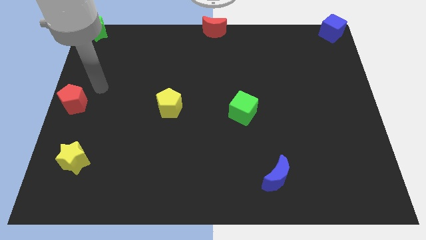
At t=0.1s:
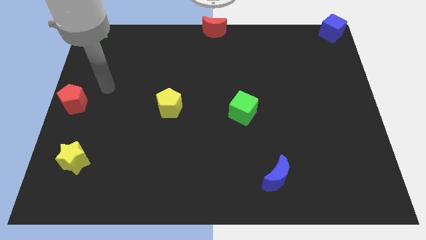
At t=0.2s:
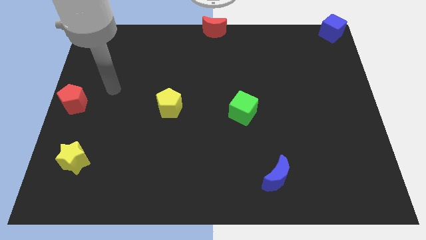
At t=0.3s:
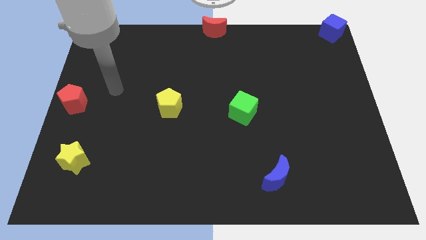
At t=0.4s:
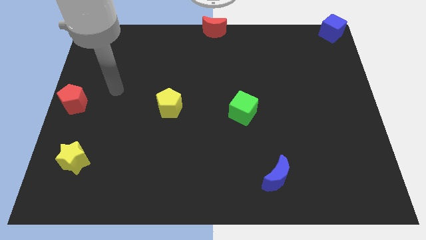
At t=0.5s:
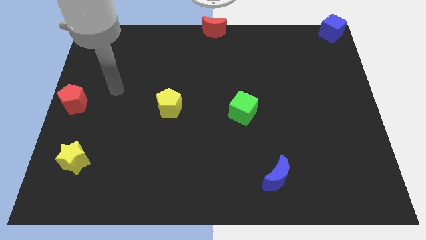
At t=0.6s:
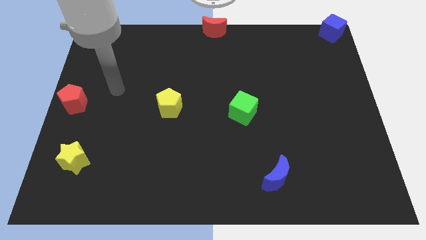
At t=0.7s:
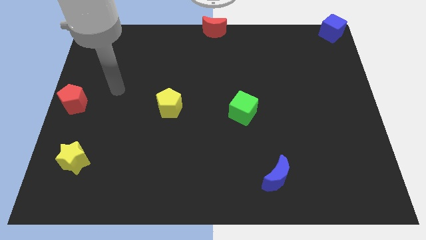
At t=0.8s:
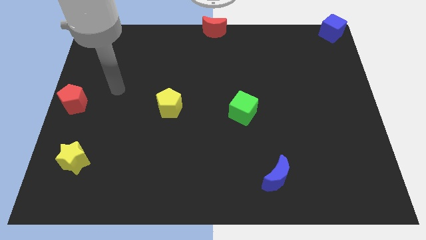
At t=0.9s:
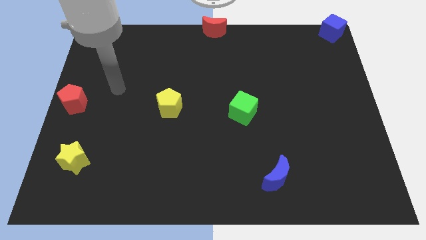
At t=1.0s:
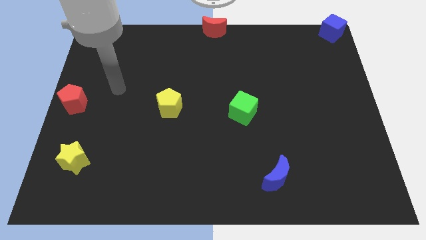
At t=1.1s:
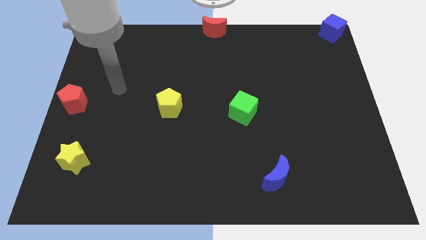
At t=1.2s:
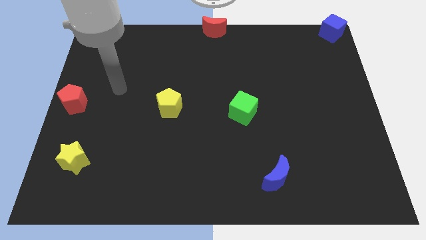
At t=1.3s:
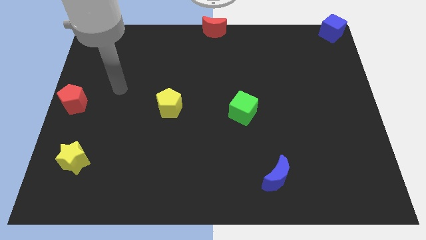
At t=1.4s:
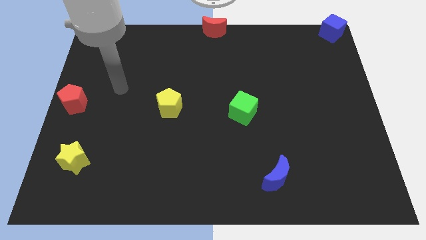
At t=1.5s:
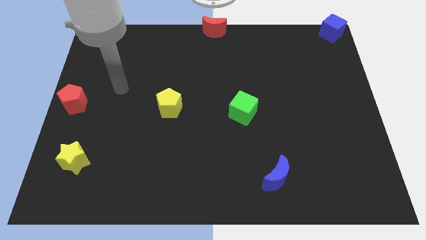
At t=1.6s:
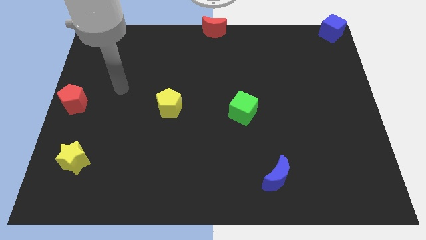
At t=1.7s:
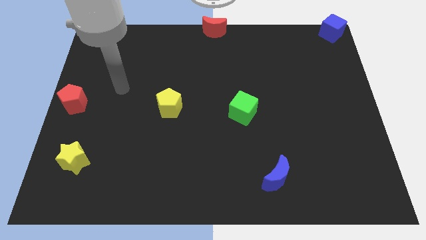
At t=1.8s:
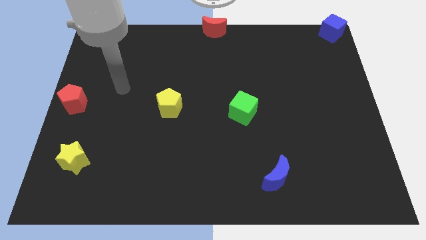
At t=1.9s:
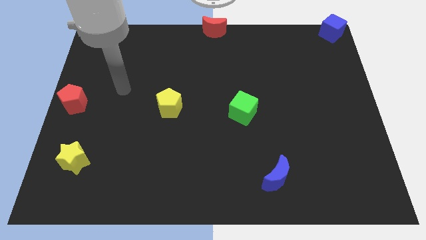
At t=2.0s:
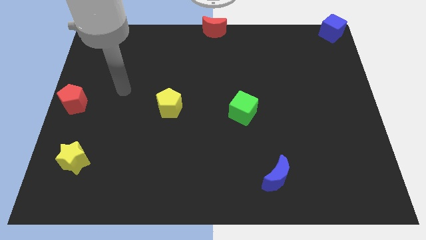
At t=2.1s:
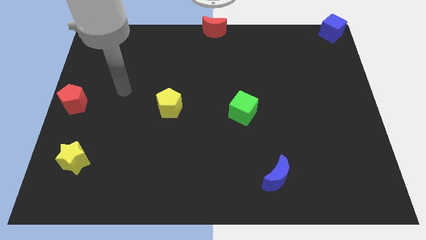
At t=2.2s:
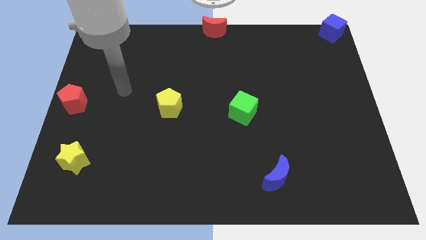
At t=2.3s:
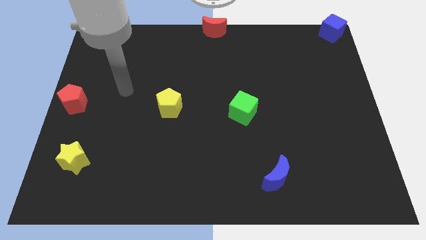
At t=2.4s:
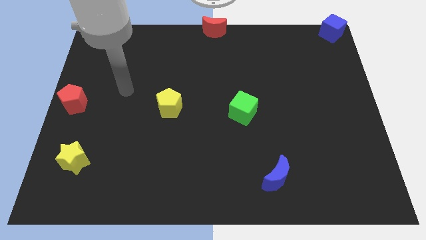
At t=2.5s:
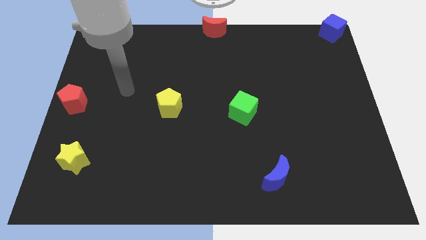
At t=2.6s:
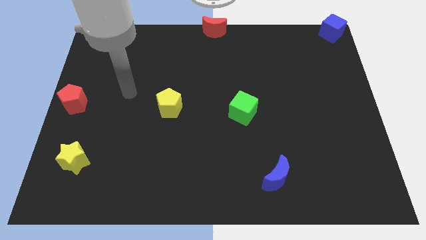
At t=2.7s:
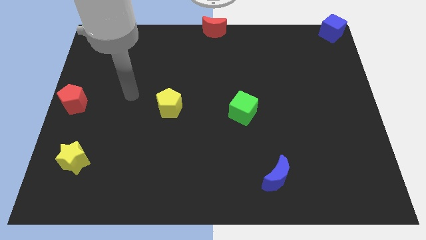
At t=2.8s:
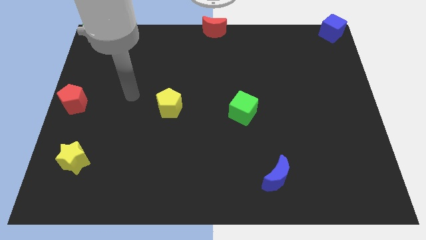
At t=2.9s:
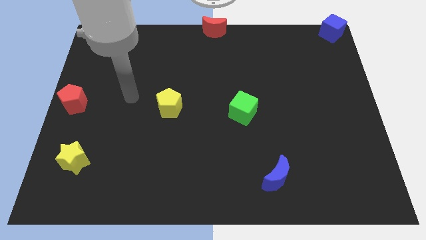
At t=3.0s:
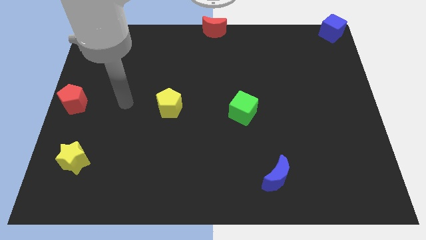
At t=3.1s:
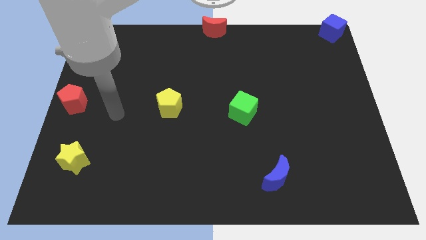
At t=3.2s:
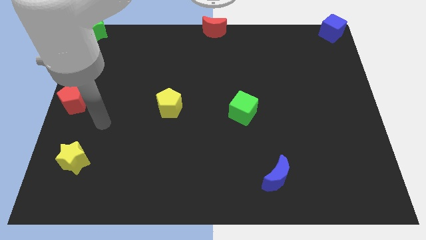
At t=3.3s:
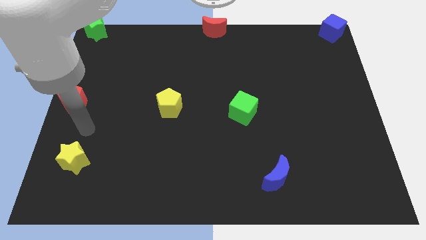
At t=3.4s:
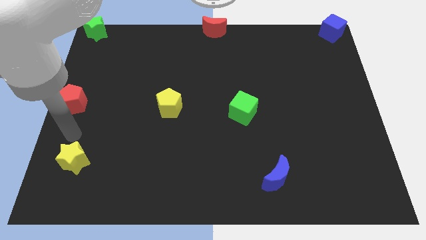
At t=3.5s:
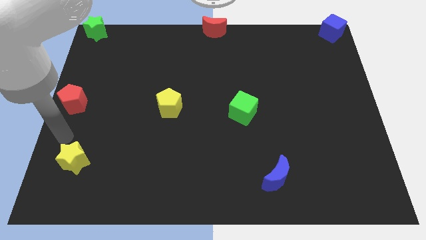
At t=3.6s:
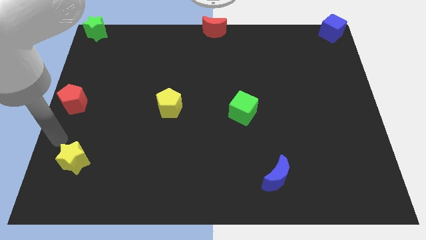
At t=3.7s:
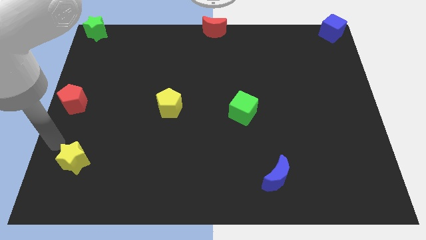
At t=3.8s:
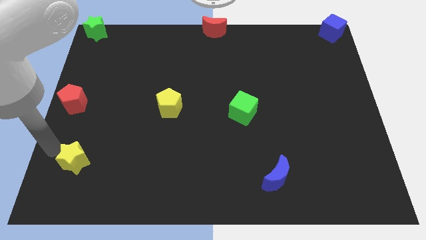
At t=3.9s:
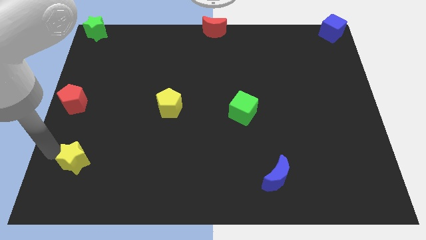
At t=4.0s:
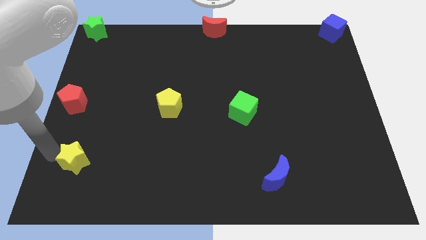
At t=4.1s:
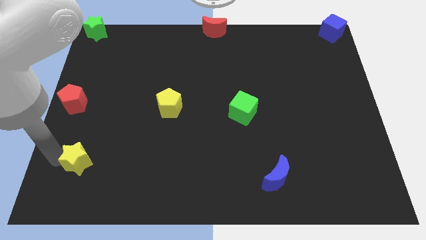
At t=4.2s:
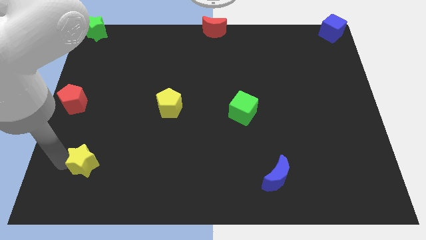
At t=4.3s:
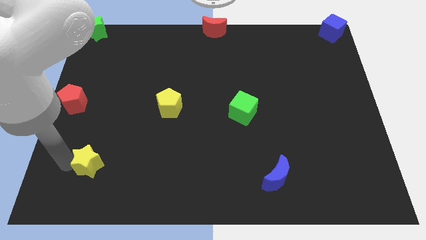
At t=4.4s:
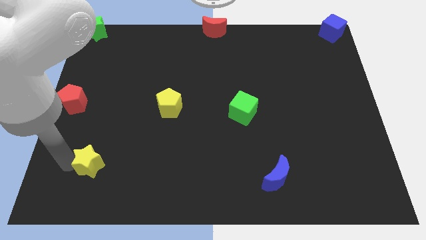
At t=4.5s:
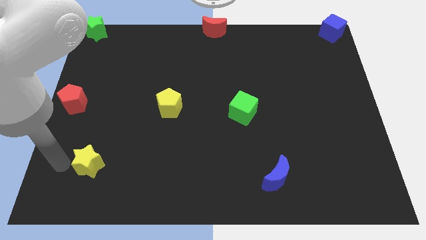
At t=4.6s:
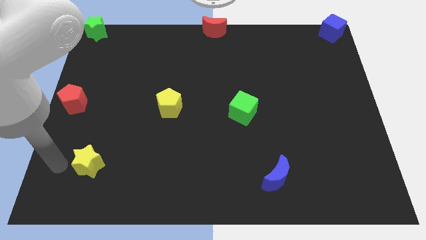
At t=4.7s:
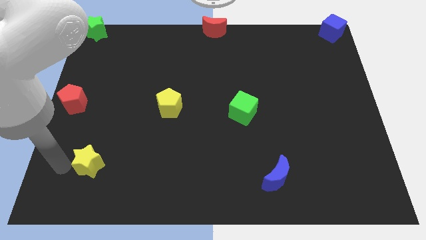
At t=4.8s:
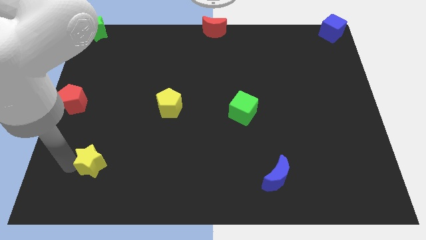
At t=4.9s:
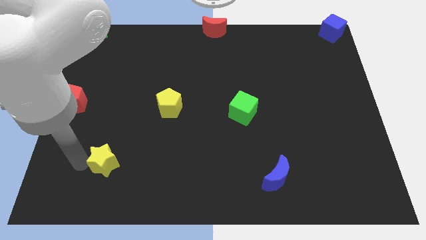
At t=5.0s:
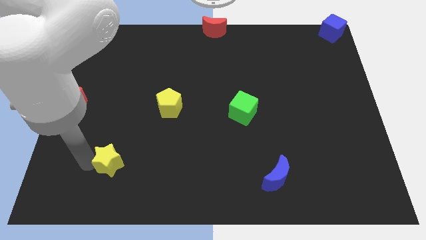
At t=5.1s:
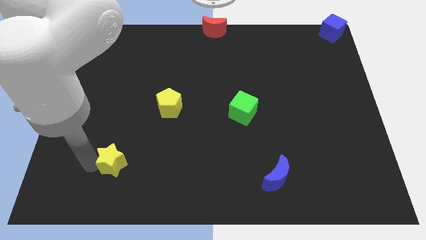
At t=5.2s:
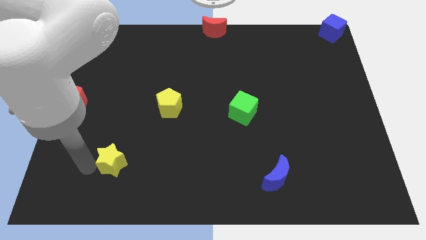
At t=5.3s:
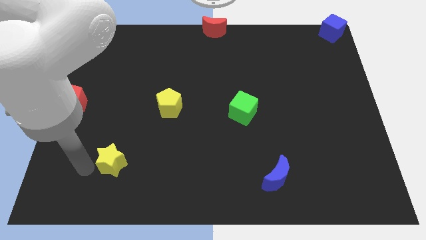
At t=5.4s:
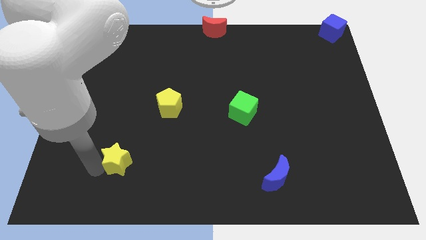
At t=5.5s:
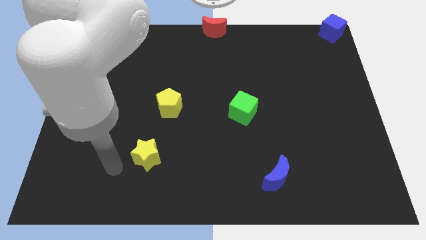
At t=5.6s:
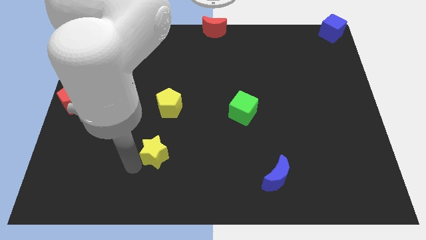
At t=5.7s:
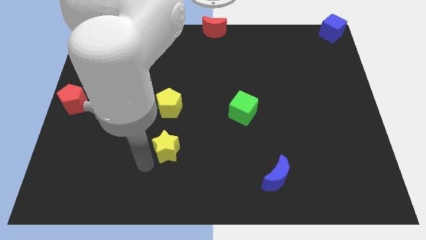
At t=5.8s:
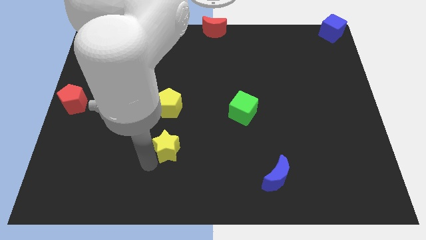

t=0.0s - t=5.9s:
move the yellow star to the bottom of the yellow pentagon

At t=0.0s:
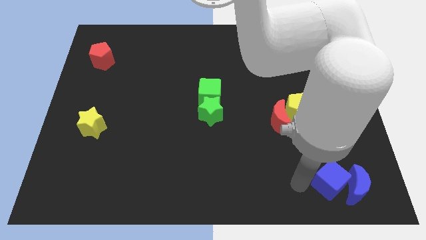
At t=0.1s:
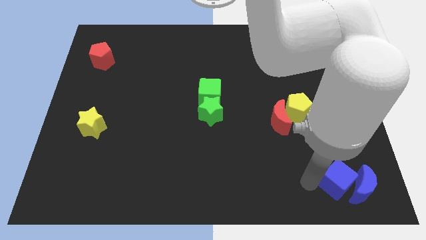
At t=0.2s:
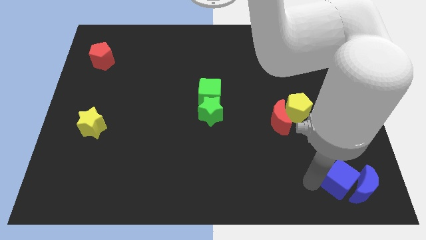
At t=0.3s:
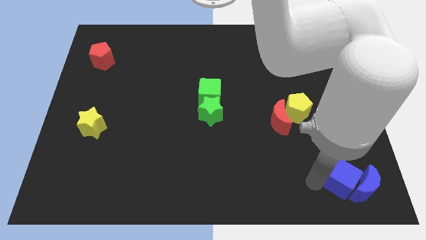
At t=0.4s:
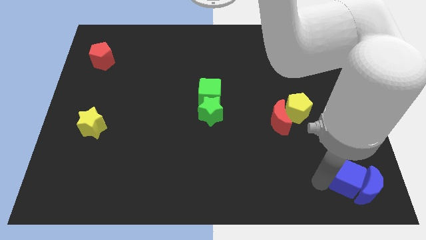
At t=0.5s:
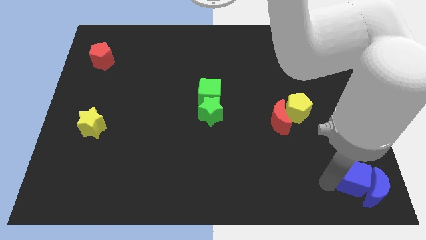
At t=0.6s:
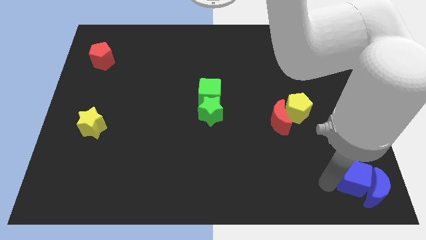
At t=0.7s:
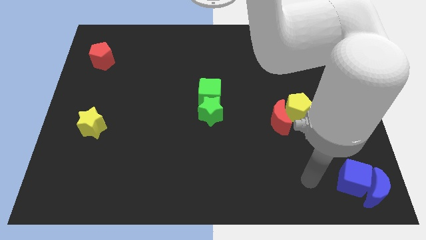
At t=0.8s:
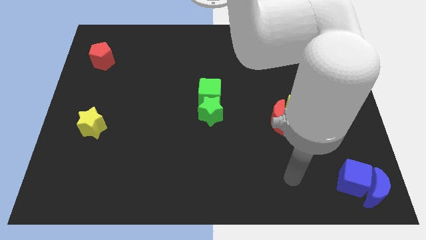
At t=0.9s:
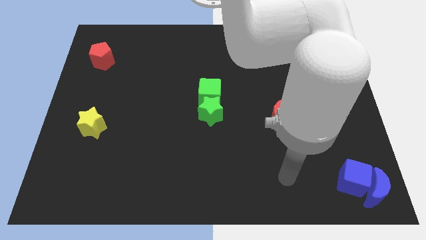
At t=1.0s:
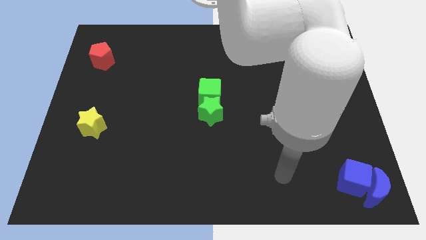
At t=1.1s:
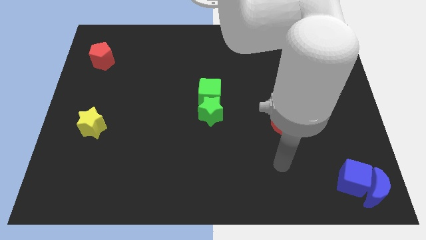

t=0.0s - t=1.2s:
push the blue cube slightly to the right bottom along with the blue crescent

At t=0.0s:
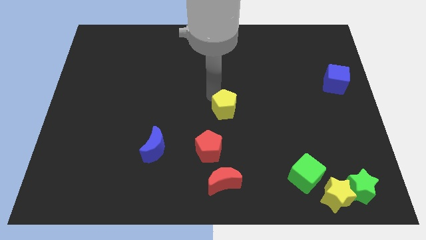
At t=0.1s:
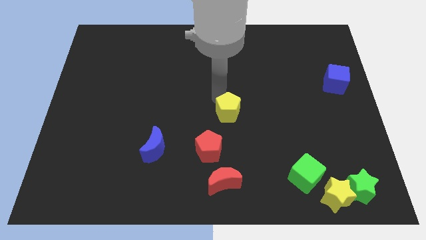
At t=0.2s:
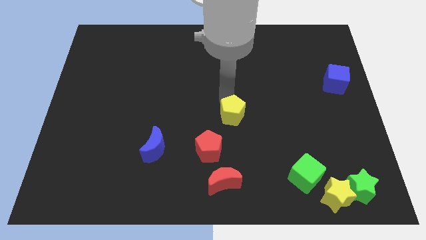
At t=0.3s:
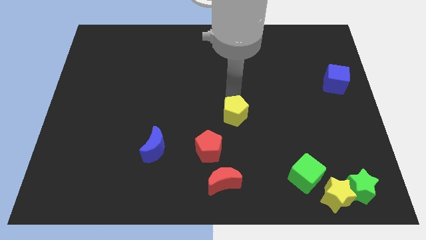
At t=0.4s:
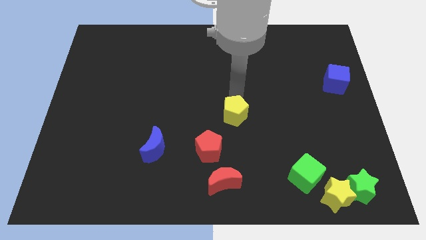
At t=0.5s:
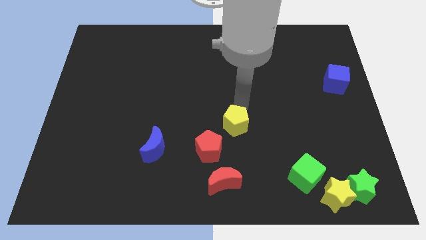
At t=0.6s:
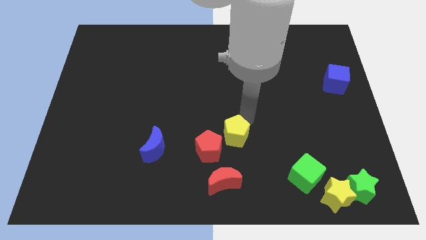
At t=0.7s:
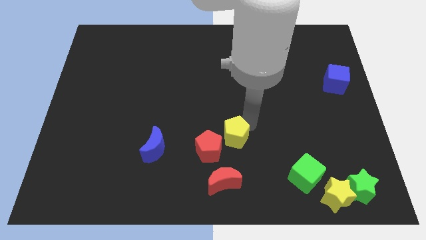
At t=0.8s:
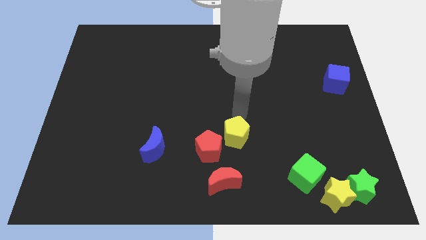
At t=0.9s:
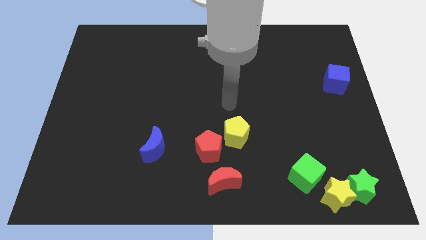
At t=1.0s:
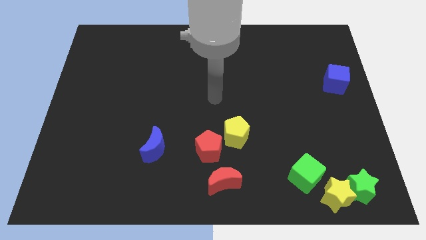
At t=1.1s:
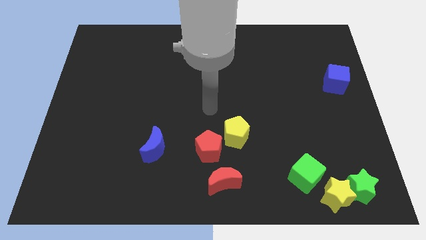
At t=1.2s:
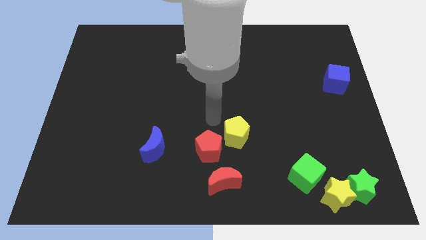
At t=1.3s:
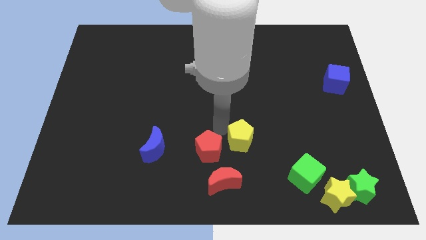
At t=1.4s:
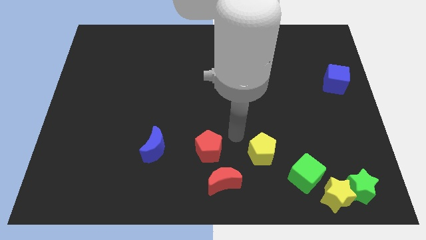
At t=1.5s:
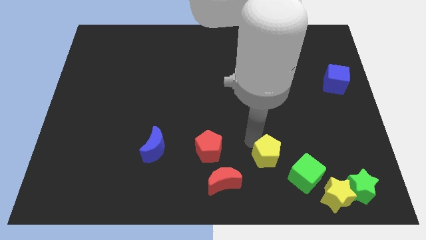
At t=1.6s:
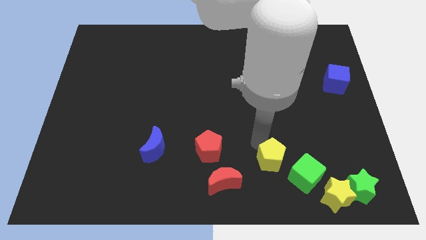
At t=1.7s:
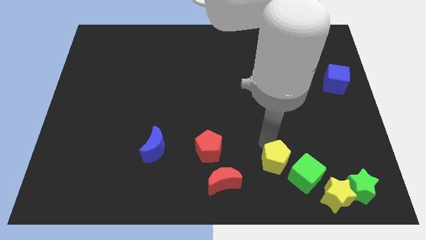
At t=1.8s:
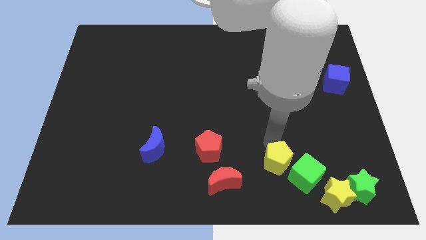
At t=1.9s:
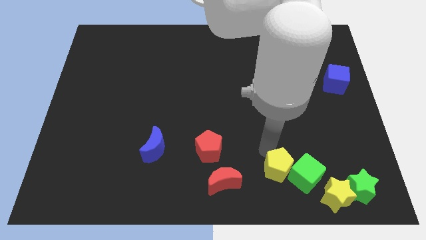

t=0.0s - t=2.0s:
put the yellow pentagon left to the green cube
